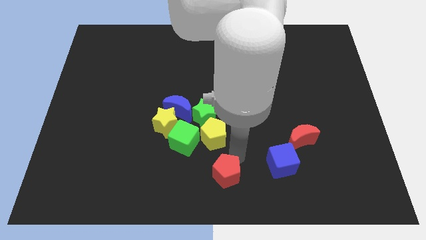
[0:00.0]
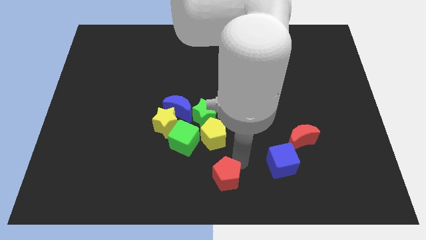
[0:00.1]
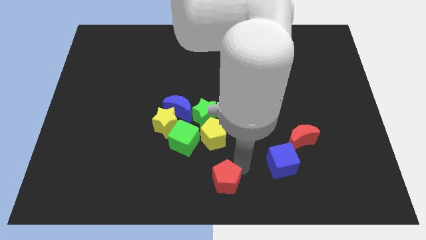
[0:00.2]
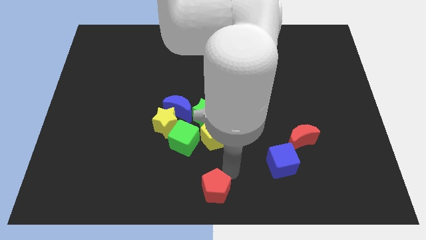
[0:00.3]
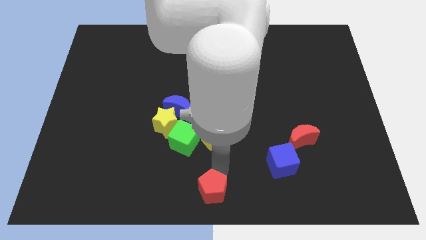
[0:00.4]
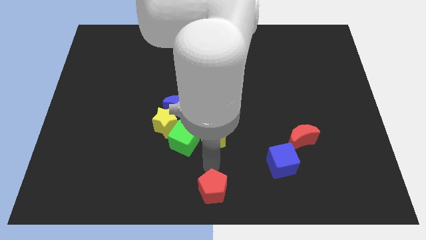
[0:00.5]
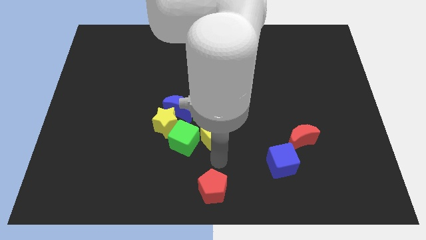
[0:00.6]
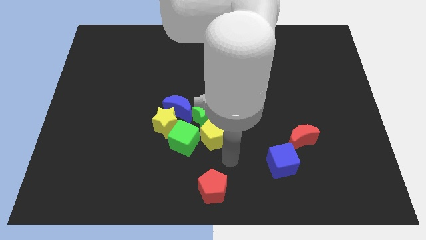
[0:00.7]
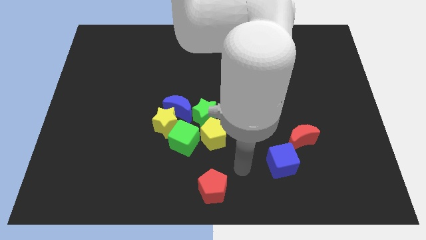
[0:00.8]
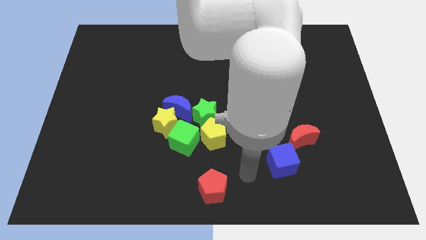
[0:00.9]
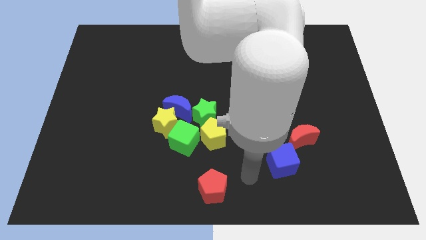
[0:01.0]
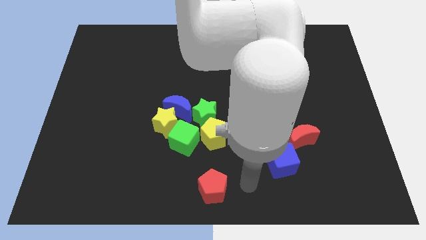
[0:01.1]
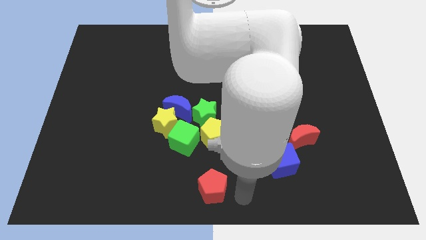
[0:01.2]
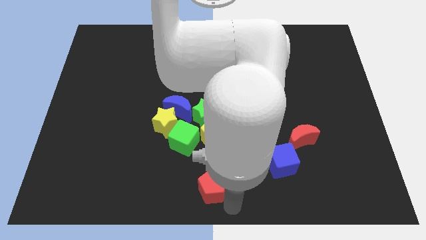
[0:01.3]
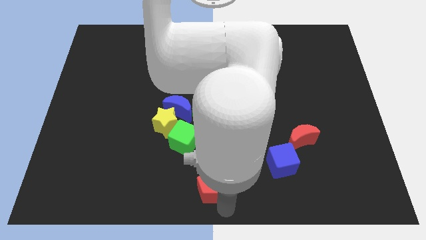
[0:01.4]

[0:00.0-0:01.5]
put the red pentagon at the bottom center of the board

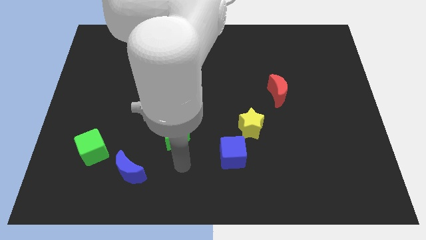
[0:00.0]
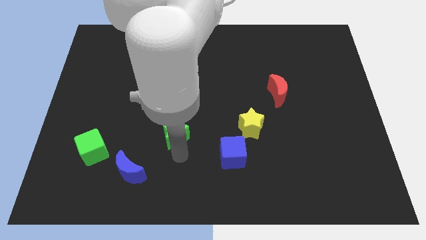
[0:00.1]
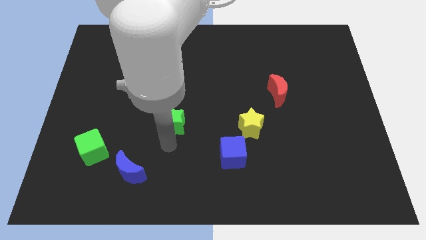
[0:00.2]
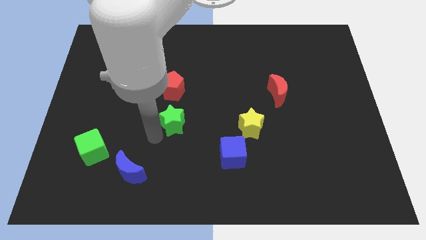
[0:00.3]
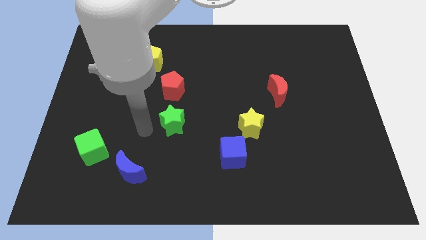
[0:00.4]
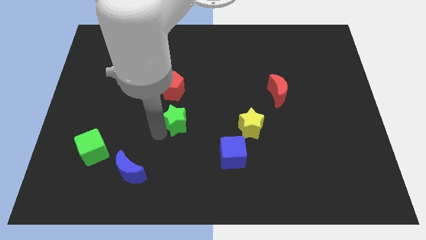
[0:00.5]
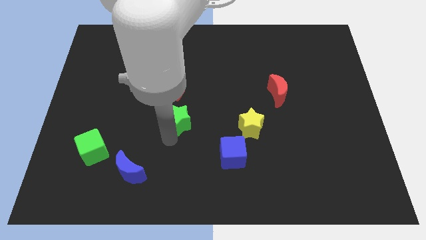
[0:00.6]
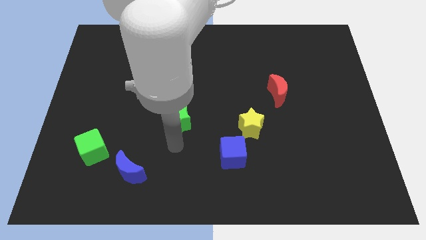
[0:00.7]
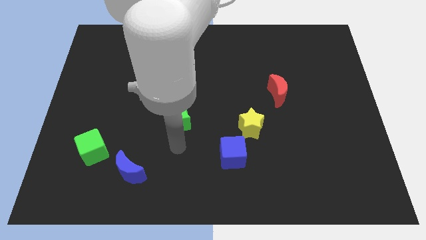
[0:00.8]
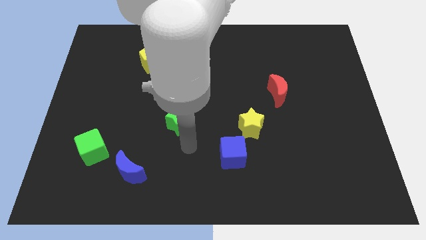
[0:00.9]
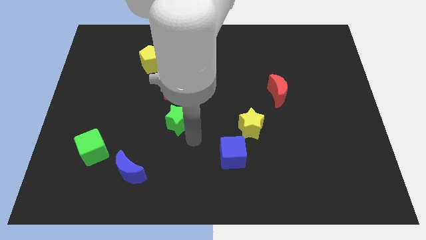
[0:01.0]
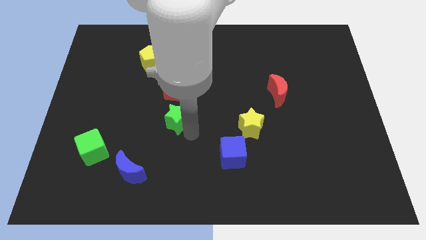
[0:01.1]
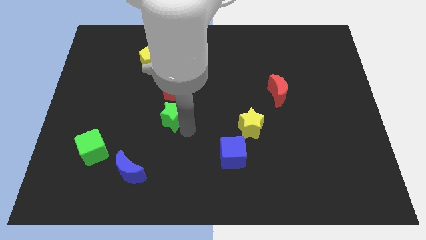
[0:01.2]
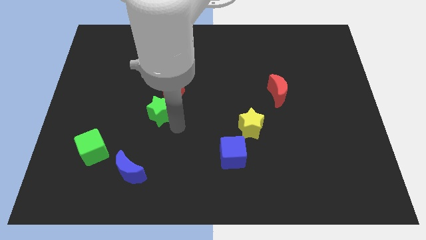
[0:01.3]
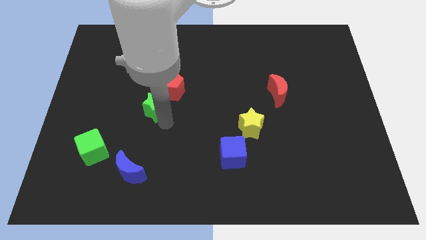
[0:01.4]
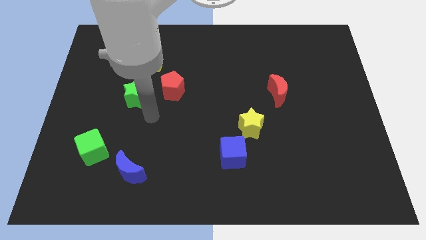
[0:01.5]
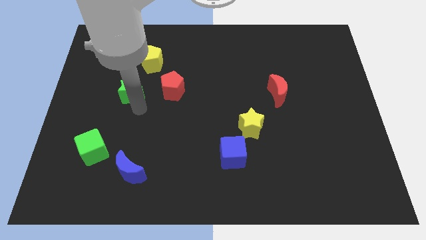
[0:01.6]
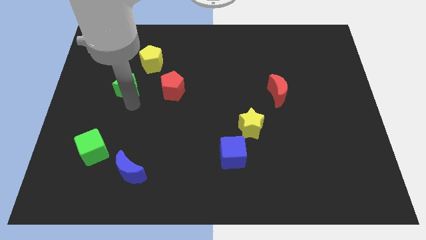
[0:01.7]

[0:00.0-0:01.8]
move the green star to the left of red pentagon

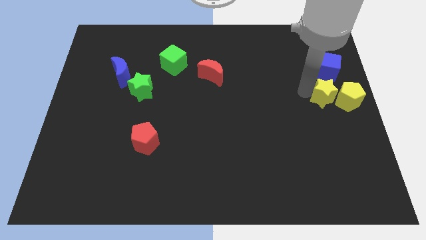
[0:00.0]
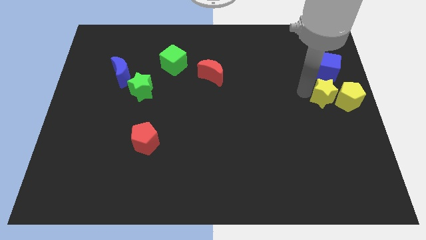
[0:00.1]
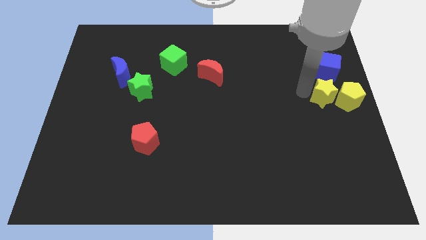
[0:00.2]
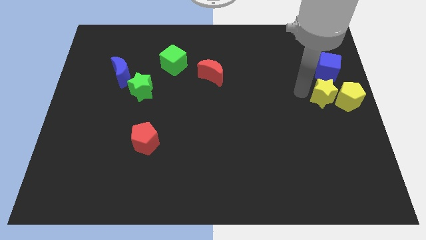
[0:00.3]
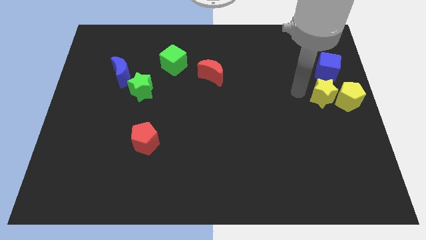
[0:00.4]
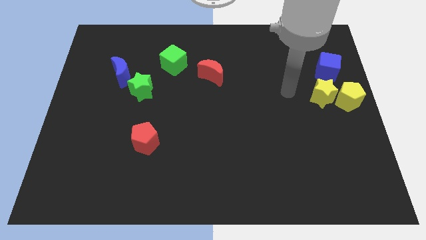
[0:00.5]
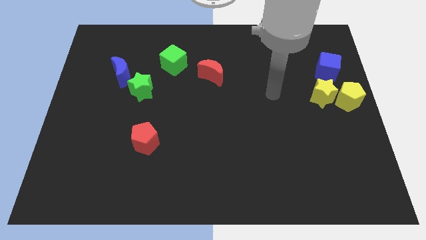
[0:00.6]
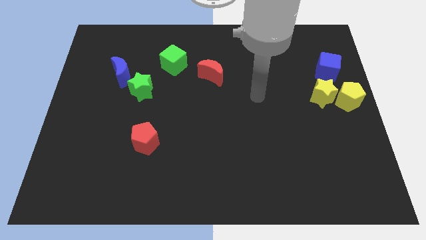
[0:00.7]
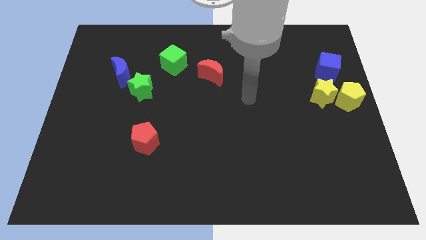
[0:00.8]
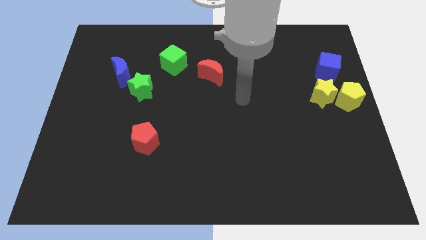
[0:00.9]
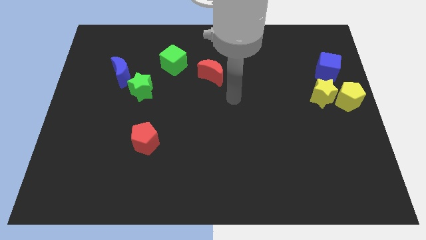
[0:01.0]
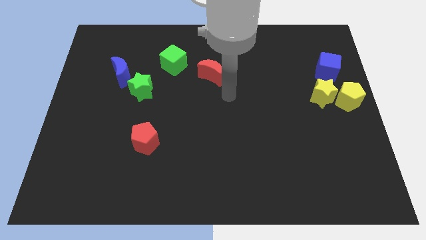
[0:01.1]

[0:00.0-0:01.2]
move your hand towards the red crescent

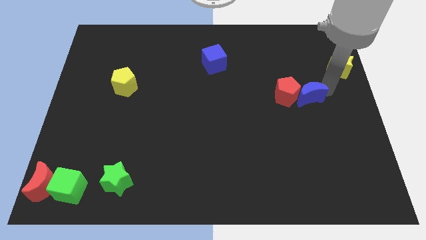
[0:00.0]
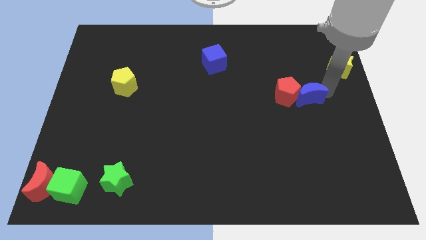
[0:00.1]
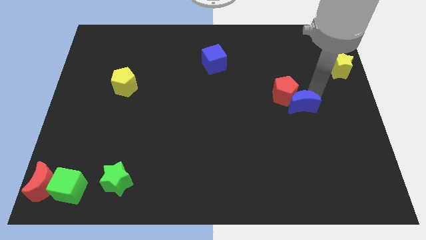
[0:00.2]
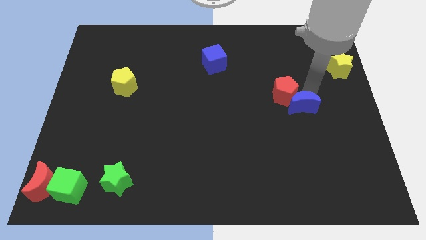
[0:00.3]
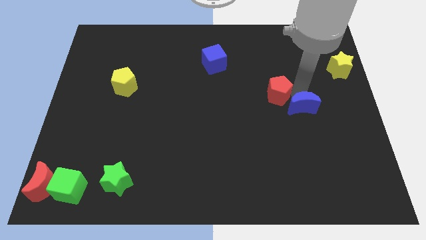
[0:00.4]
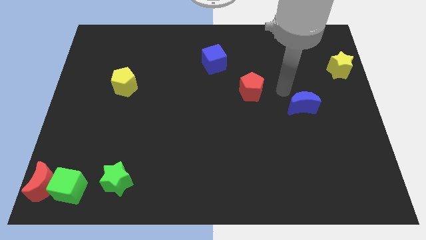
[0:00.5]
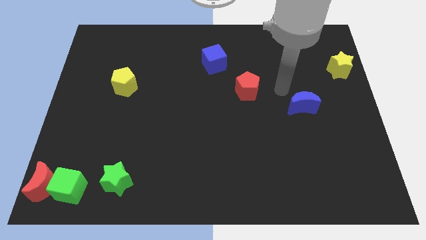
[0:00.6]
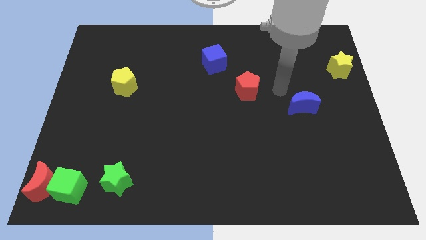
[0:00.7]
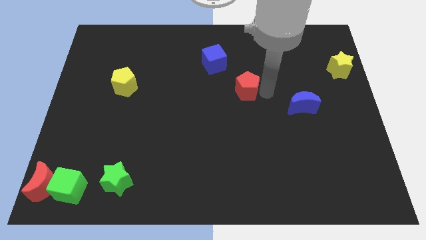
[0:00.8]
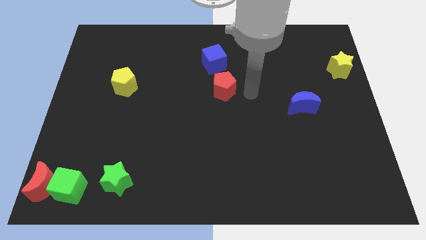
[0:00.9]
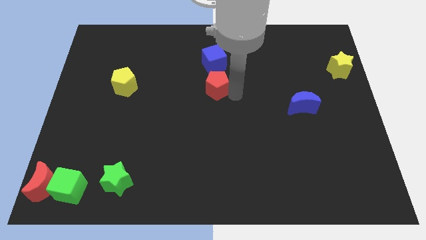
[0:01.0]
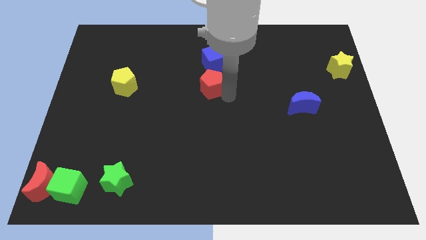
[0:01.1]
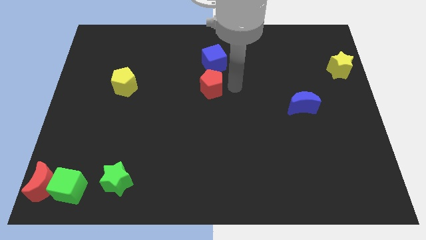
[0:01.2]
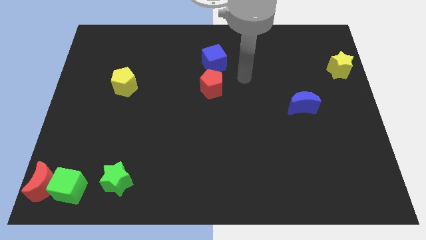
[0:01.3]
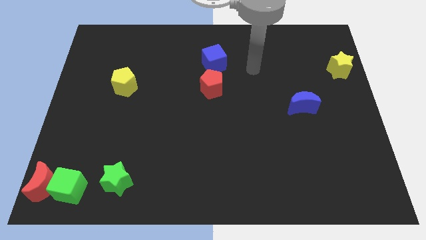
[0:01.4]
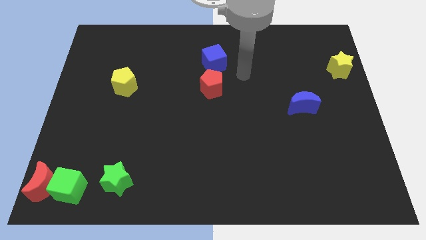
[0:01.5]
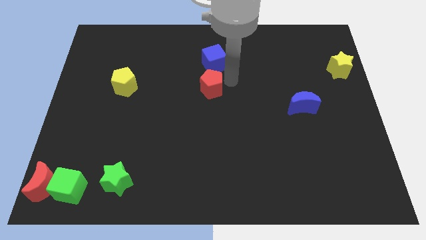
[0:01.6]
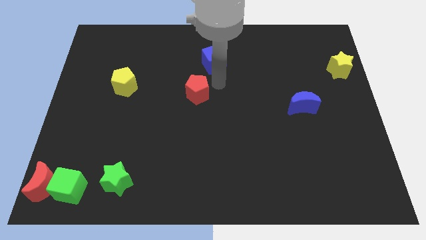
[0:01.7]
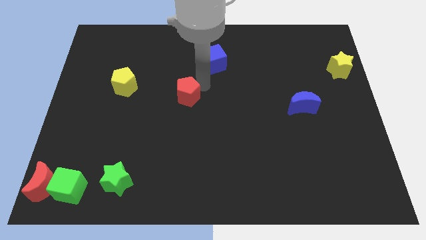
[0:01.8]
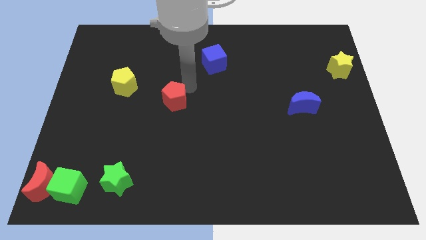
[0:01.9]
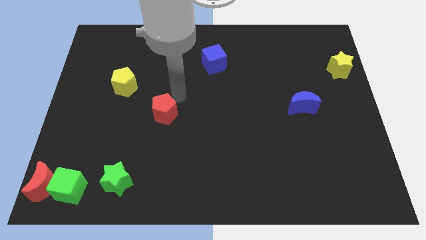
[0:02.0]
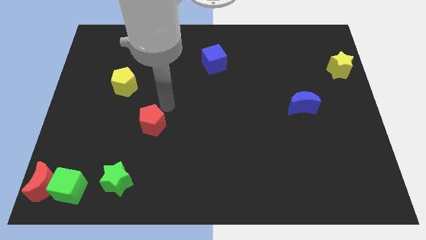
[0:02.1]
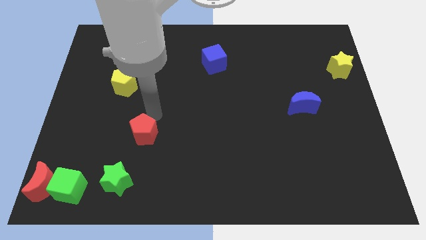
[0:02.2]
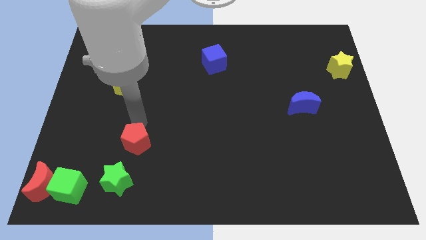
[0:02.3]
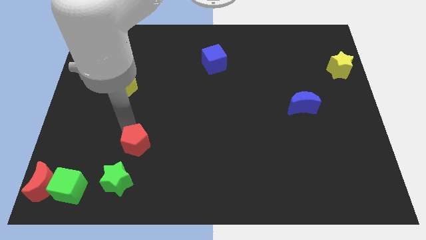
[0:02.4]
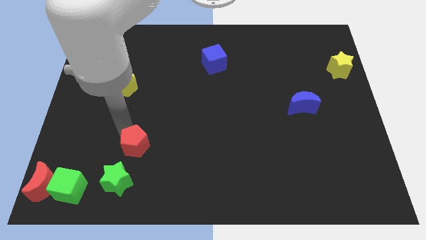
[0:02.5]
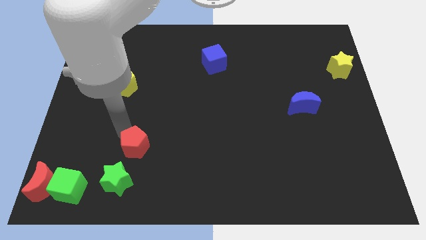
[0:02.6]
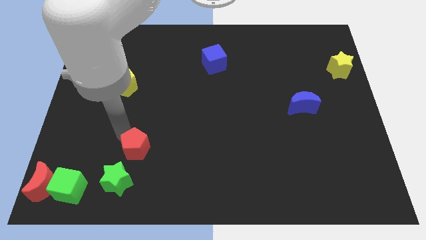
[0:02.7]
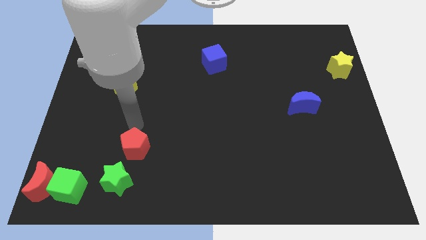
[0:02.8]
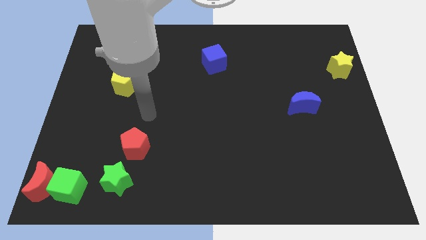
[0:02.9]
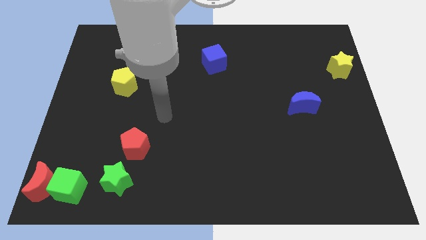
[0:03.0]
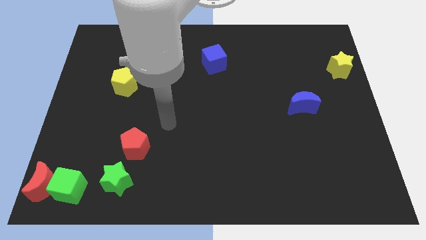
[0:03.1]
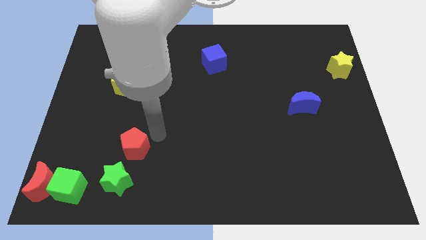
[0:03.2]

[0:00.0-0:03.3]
place the red pentagon at the top right side of green star

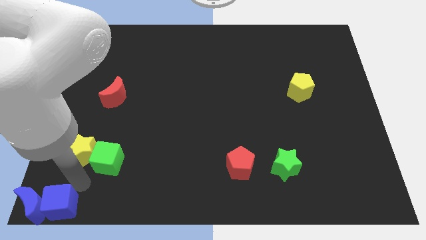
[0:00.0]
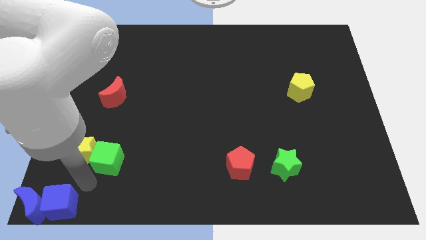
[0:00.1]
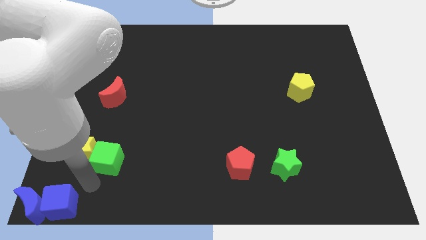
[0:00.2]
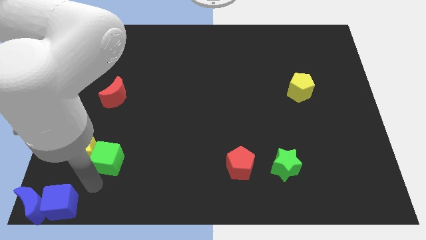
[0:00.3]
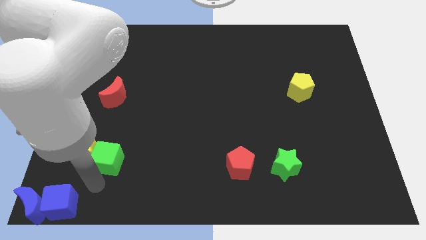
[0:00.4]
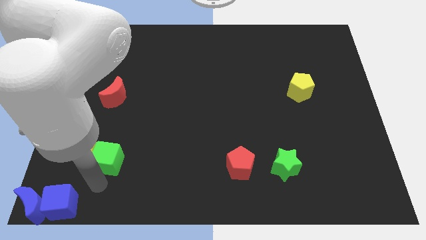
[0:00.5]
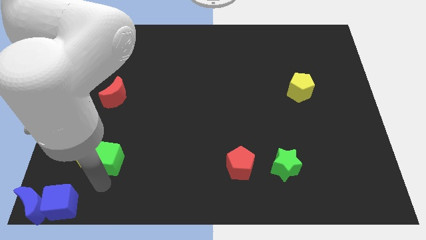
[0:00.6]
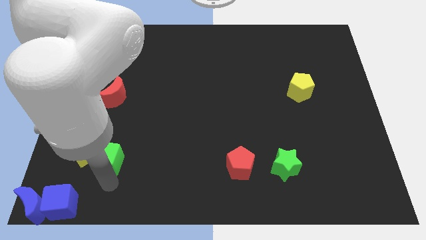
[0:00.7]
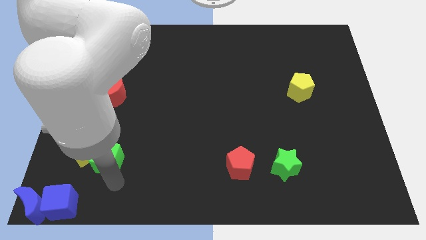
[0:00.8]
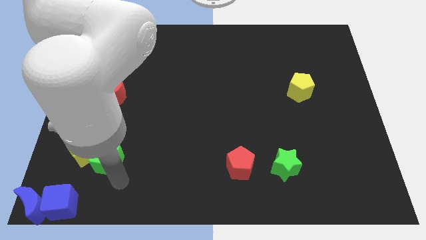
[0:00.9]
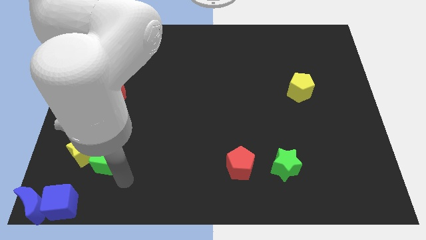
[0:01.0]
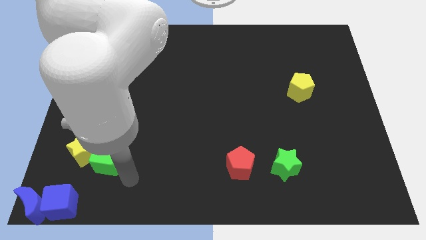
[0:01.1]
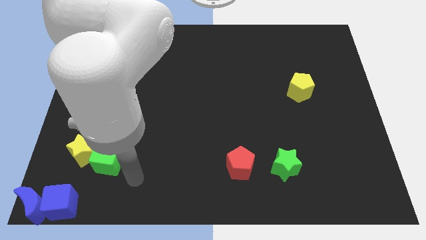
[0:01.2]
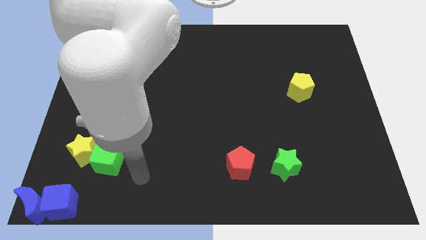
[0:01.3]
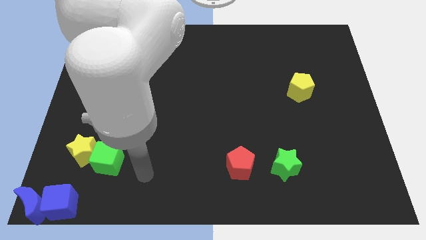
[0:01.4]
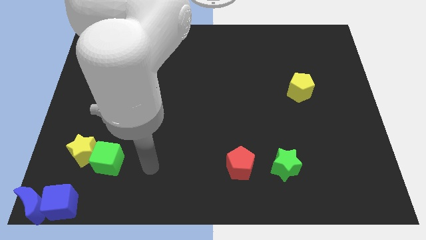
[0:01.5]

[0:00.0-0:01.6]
place your arm in between the red pentagon and green cube
